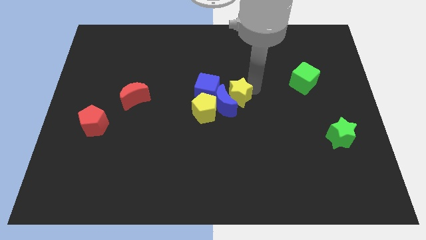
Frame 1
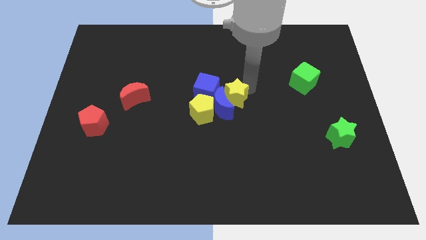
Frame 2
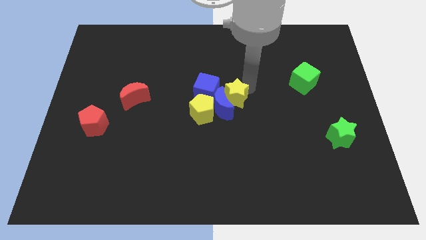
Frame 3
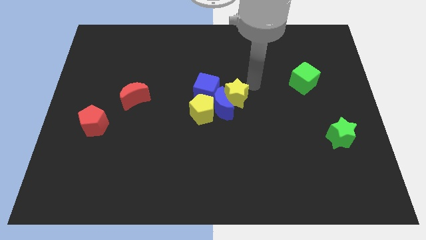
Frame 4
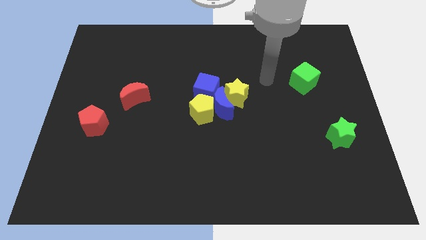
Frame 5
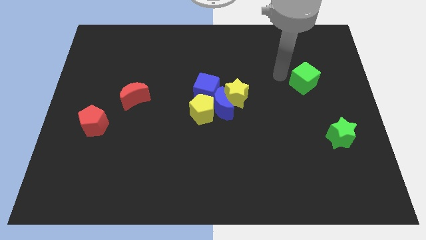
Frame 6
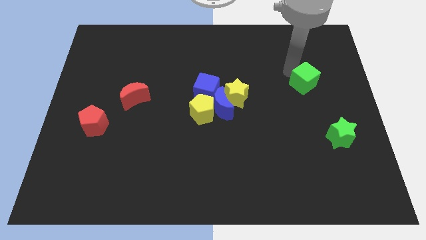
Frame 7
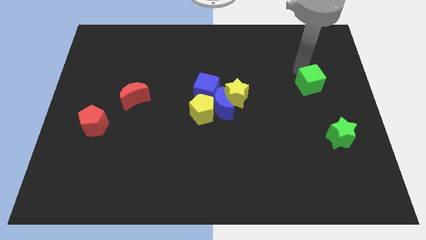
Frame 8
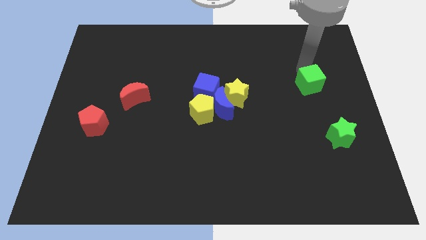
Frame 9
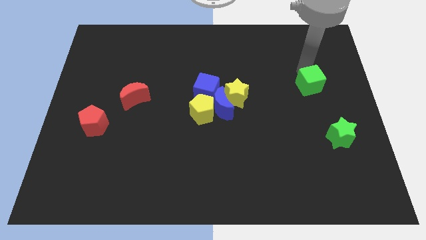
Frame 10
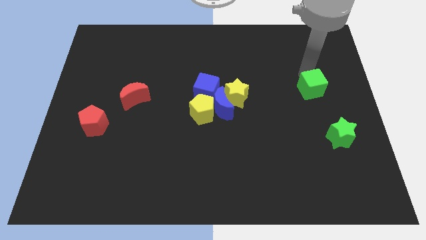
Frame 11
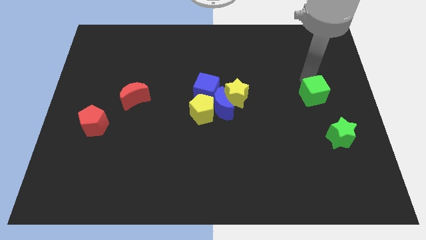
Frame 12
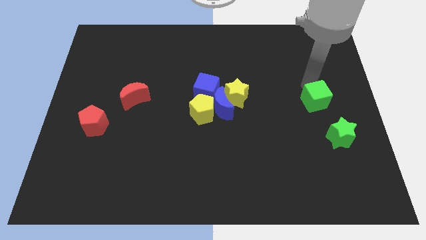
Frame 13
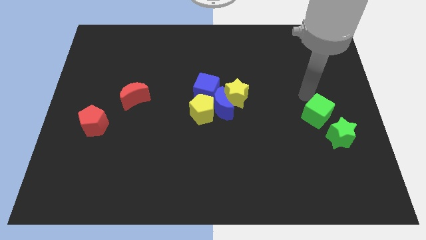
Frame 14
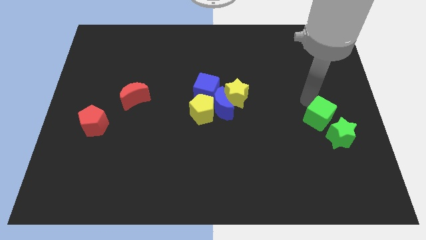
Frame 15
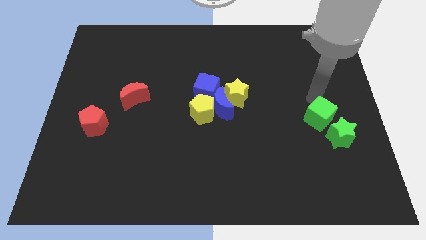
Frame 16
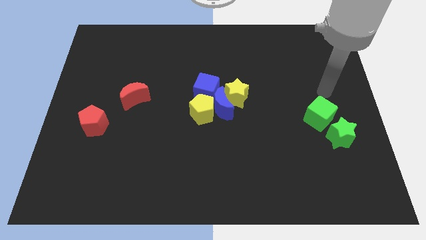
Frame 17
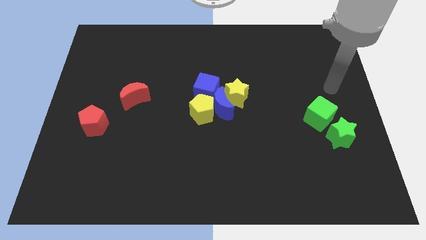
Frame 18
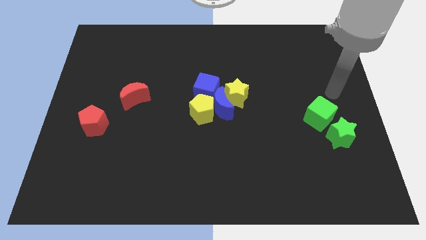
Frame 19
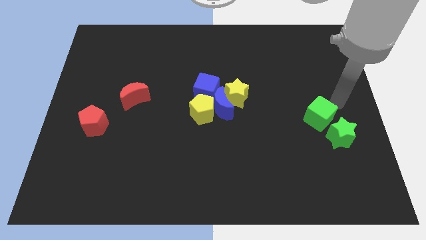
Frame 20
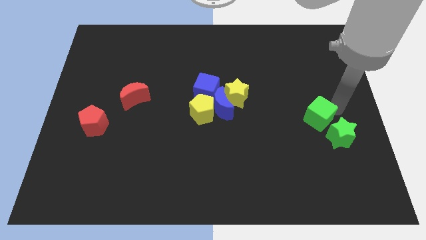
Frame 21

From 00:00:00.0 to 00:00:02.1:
slide the green cube to the top left of the green star

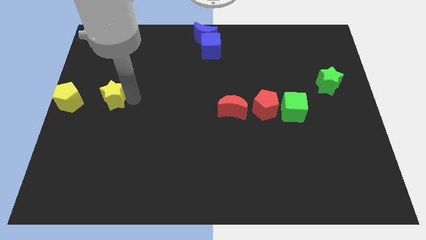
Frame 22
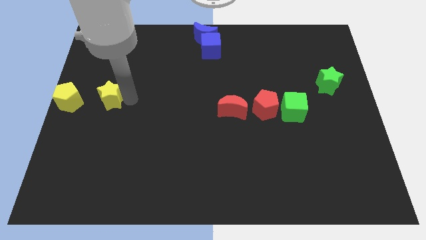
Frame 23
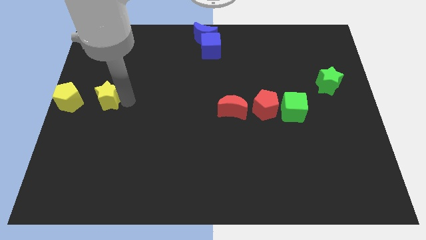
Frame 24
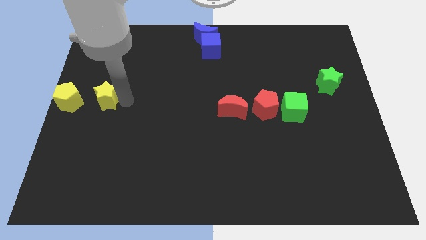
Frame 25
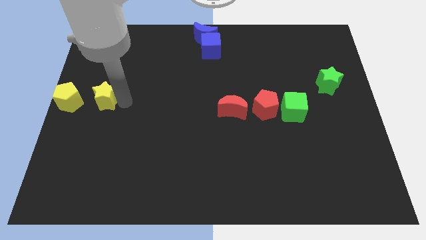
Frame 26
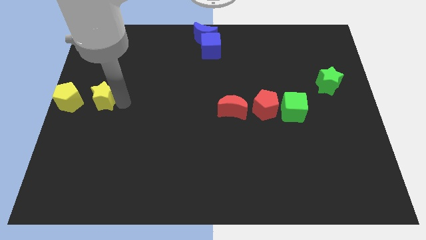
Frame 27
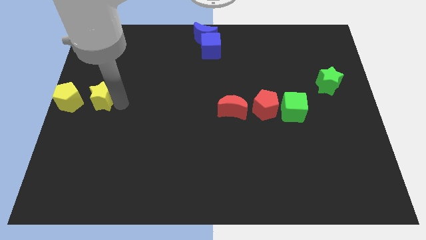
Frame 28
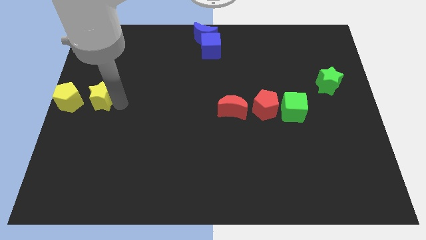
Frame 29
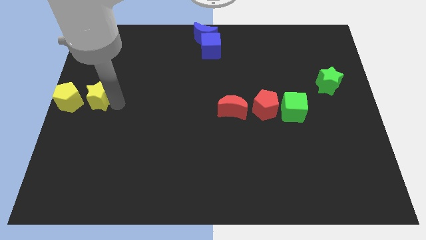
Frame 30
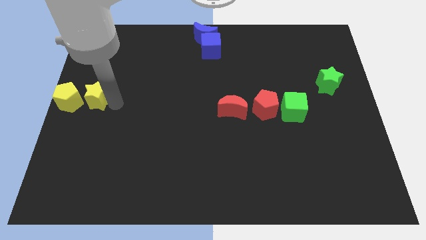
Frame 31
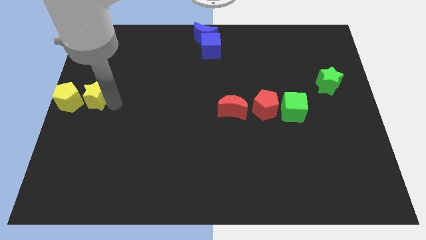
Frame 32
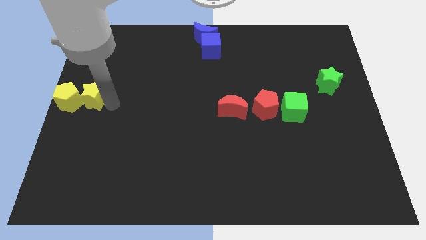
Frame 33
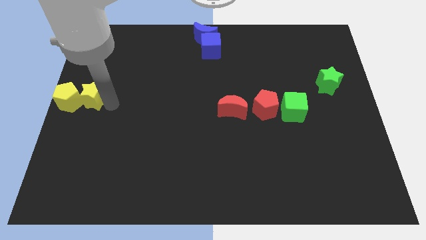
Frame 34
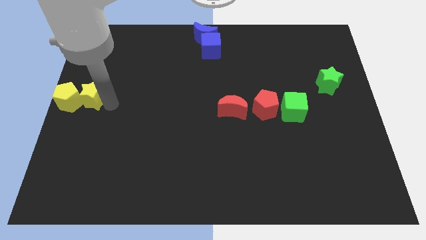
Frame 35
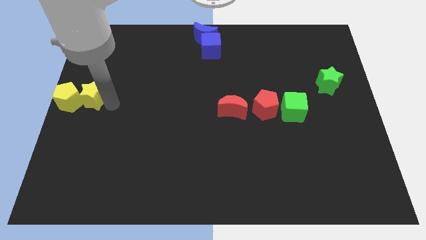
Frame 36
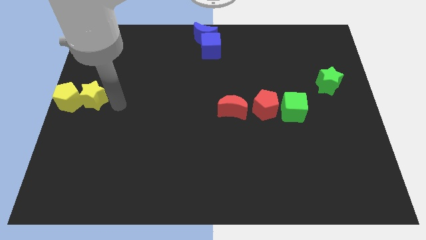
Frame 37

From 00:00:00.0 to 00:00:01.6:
push the yellow star close to the yellow pentagon

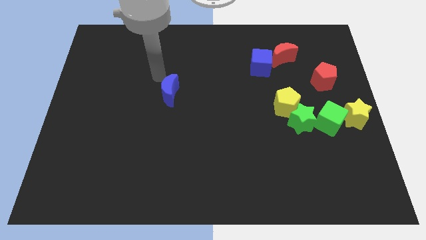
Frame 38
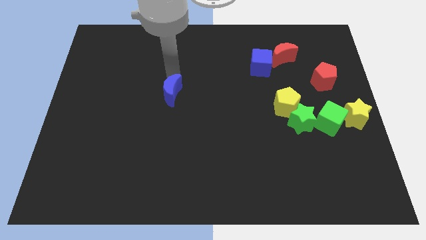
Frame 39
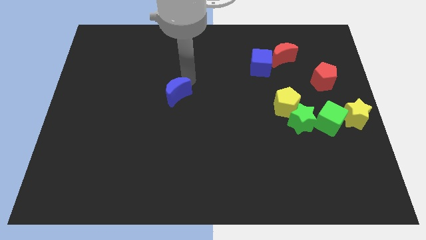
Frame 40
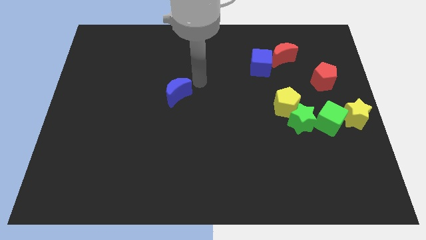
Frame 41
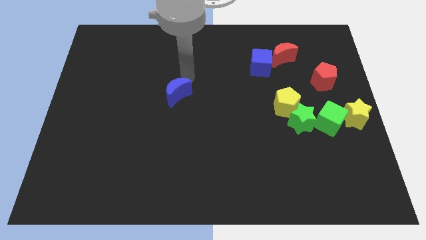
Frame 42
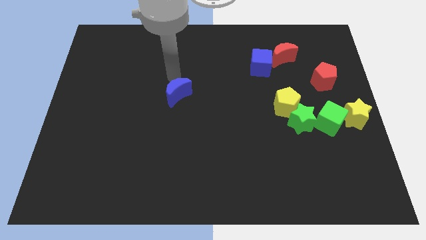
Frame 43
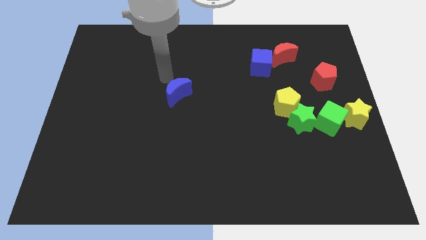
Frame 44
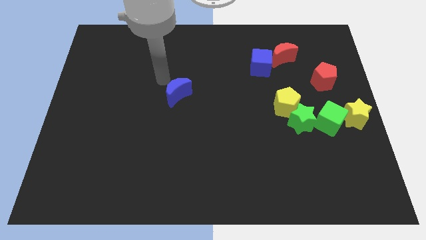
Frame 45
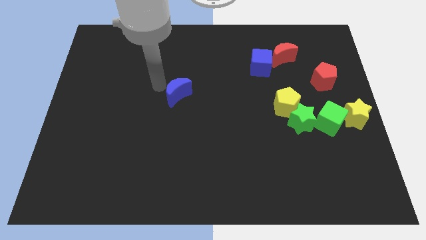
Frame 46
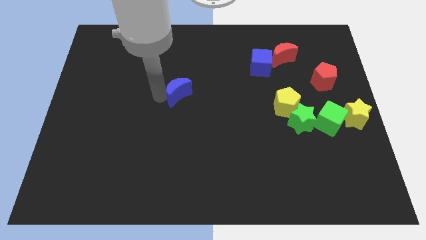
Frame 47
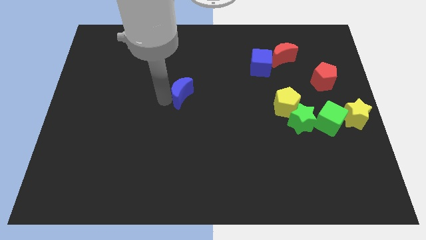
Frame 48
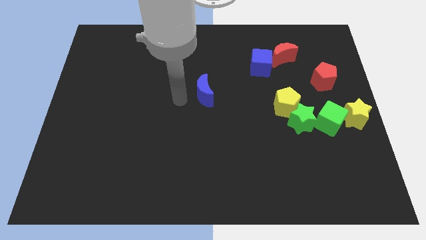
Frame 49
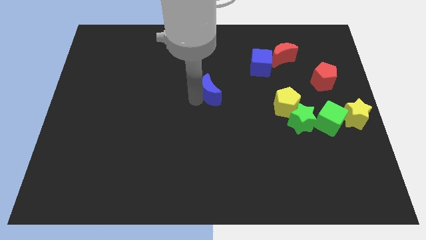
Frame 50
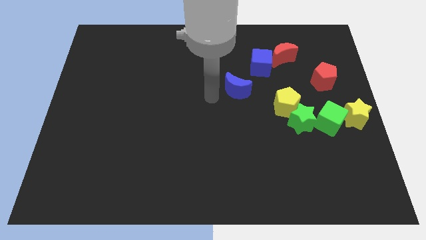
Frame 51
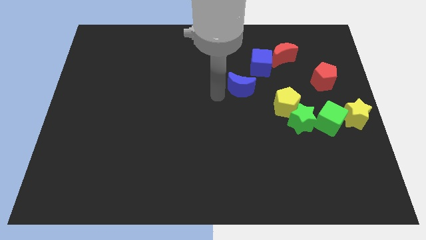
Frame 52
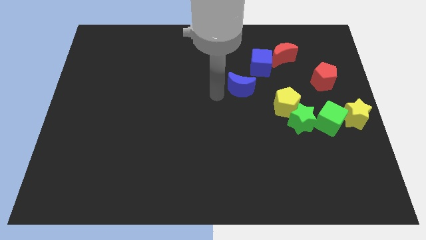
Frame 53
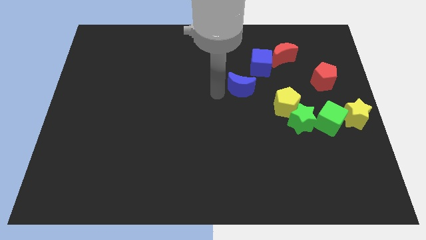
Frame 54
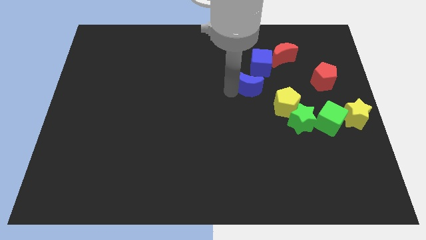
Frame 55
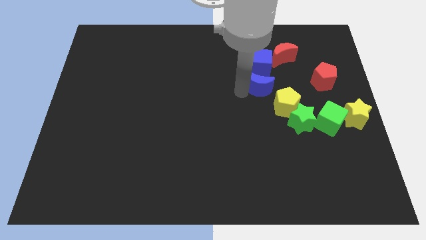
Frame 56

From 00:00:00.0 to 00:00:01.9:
place the blue crescent below the blue cube

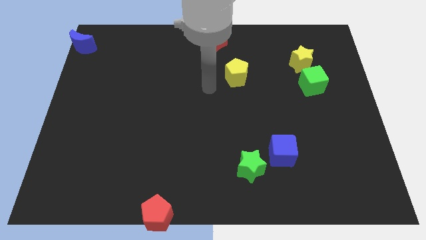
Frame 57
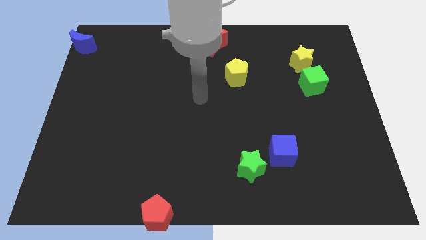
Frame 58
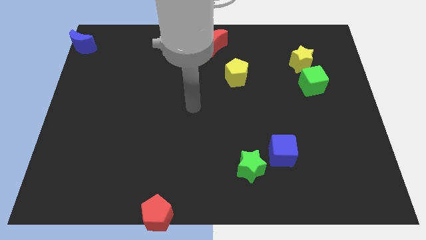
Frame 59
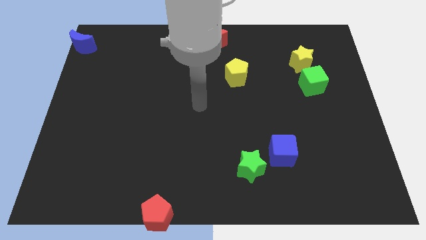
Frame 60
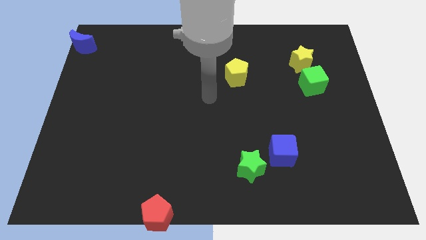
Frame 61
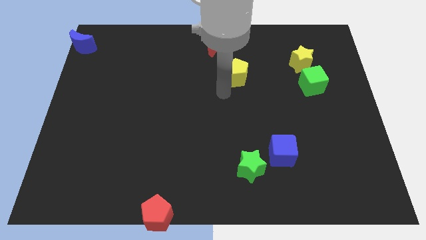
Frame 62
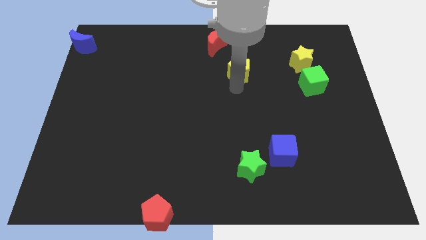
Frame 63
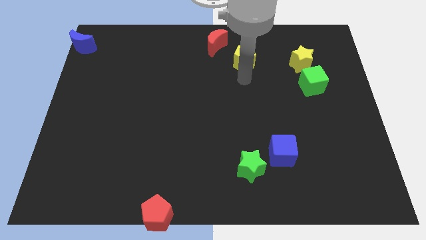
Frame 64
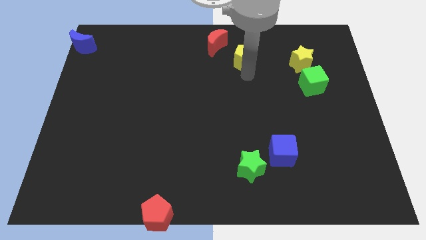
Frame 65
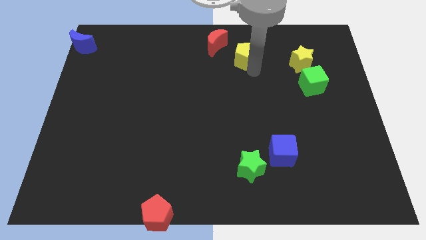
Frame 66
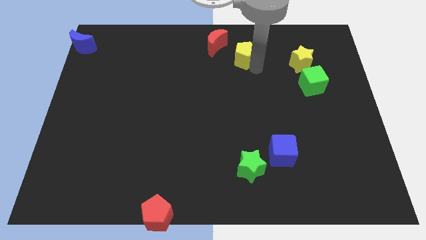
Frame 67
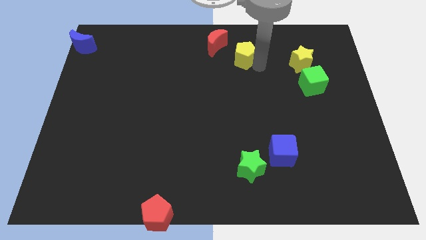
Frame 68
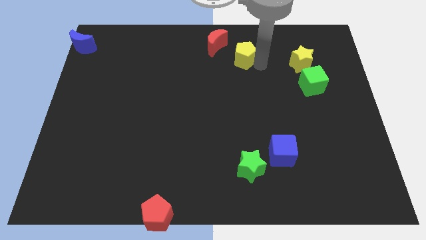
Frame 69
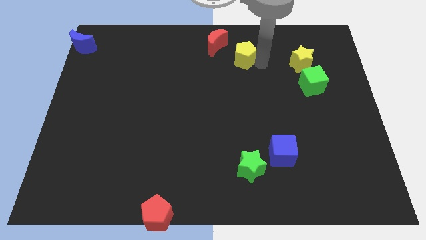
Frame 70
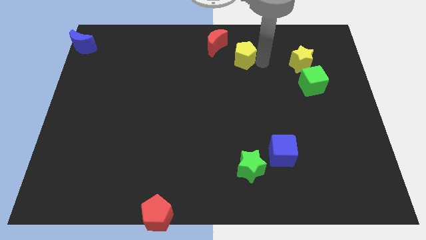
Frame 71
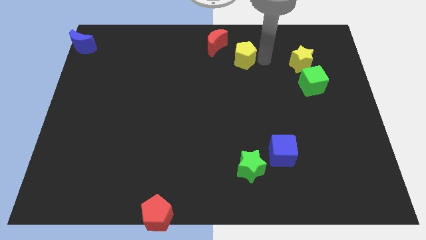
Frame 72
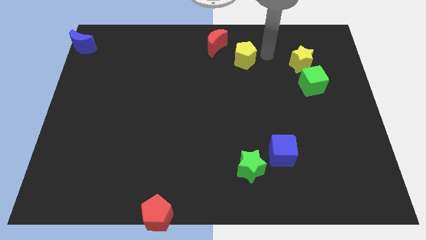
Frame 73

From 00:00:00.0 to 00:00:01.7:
place yellow pentagon to the left of the yellow star

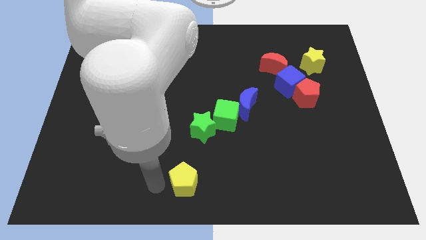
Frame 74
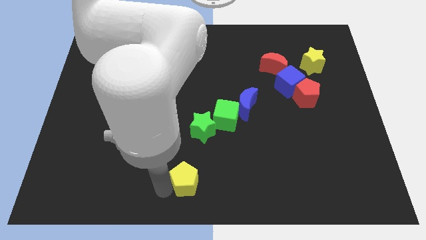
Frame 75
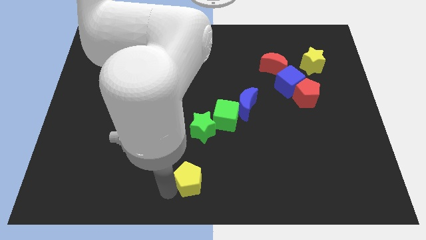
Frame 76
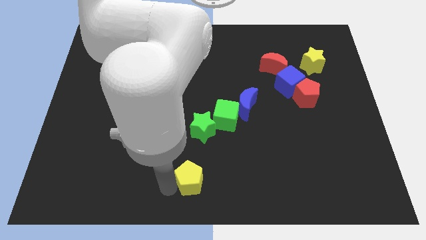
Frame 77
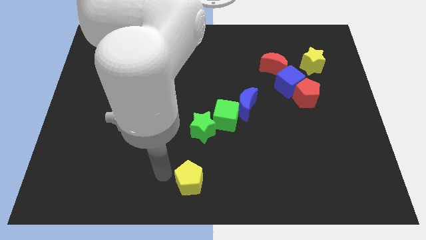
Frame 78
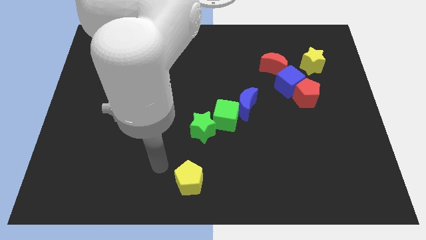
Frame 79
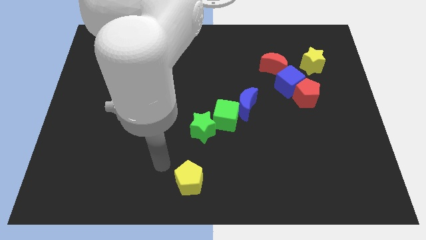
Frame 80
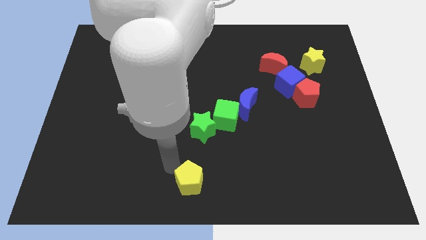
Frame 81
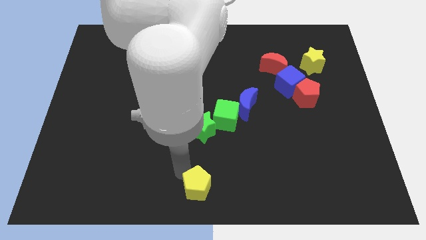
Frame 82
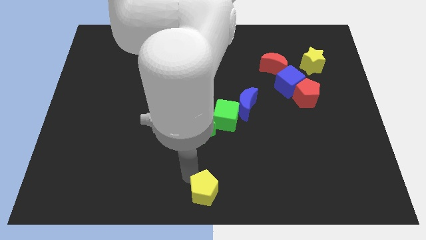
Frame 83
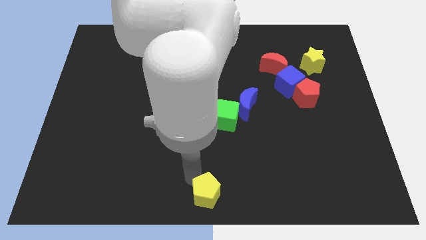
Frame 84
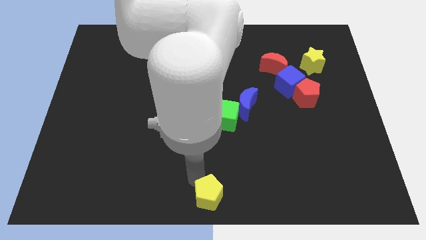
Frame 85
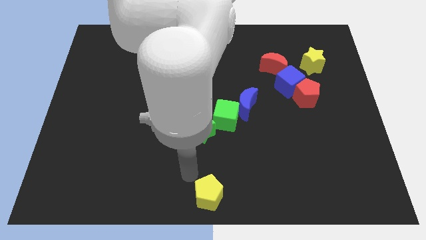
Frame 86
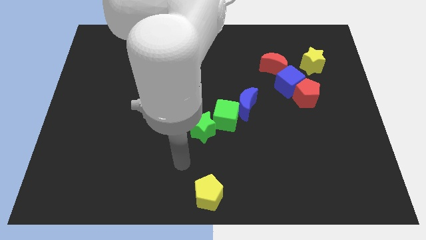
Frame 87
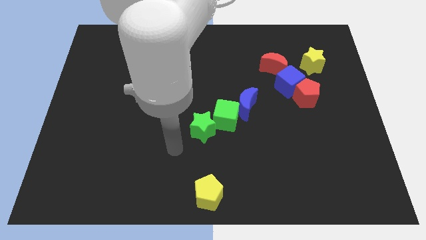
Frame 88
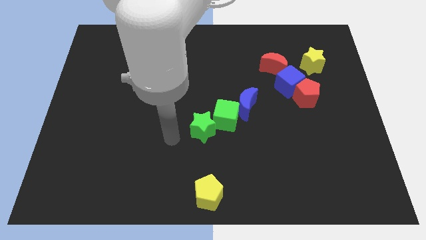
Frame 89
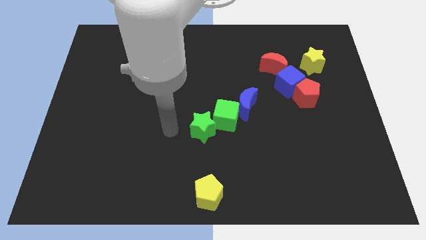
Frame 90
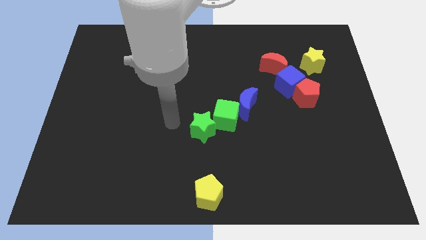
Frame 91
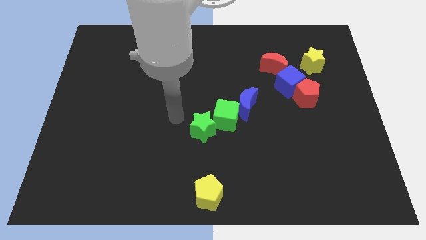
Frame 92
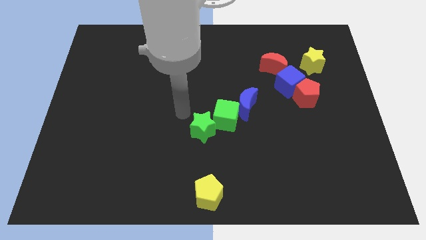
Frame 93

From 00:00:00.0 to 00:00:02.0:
push the yellow pentagon to the bottom center
